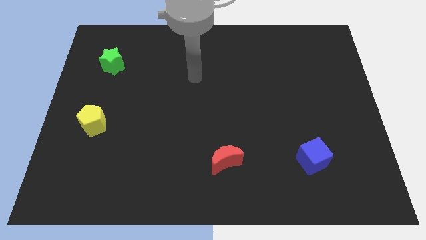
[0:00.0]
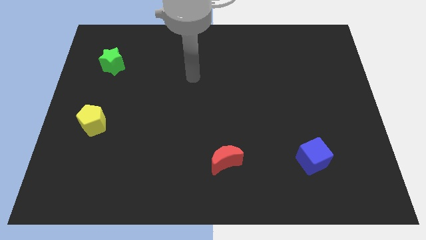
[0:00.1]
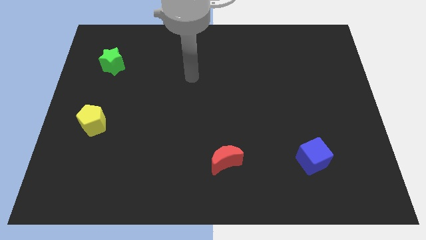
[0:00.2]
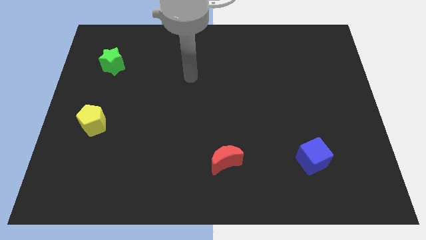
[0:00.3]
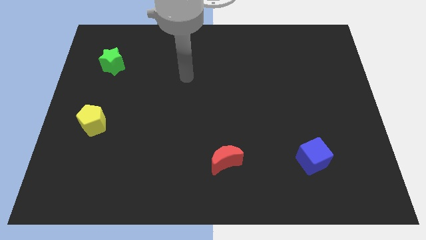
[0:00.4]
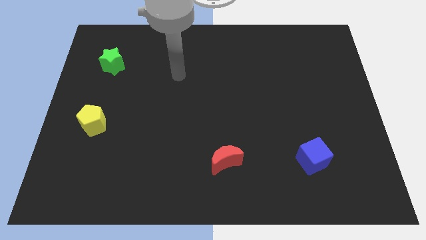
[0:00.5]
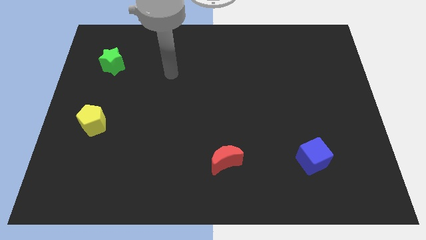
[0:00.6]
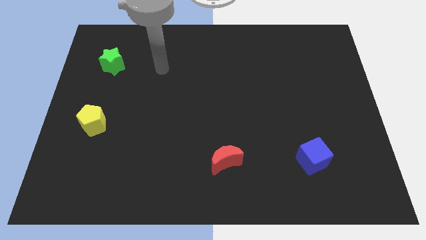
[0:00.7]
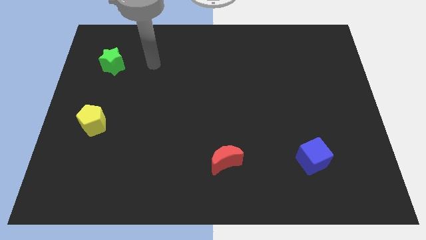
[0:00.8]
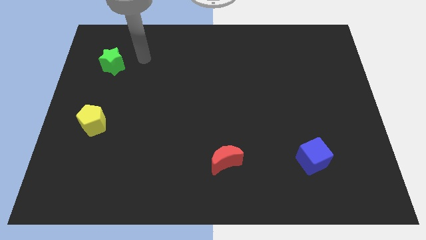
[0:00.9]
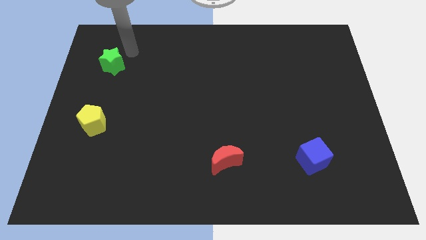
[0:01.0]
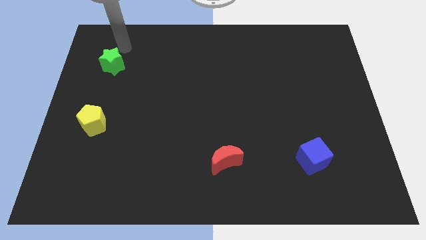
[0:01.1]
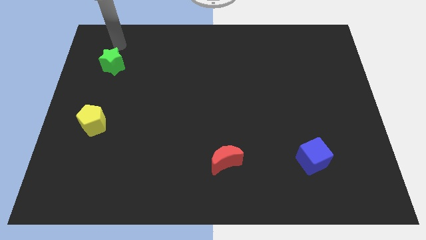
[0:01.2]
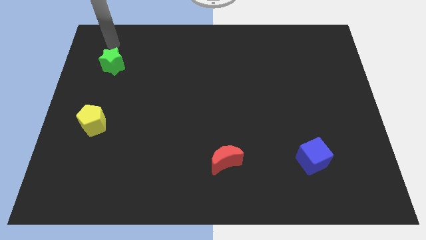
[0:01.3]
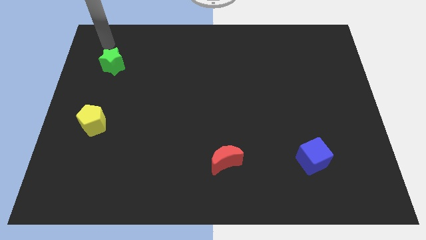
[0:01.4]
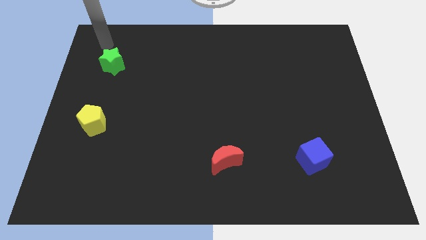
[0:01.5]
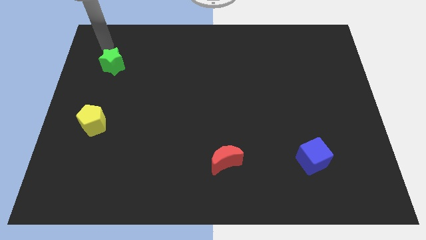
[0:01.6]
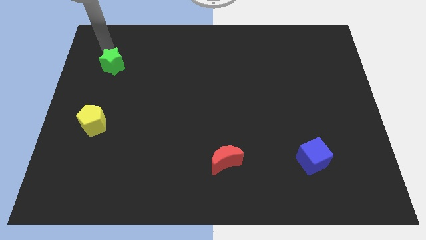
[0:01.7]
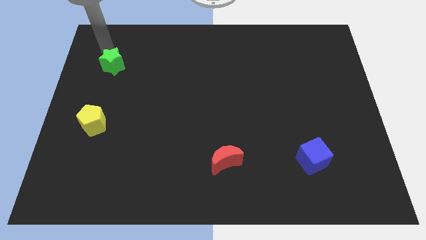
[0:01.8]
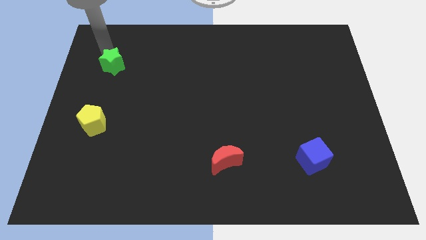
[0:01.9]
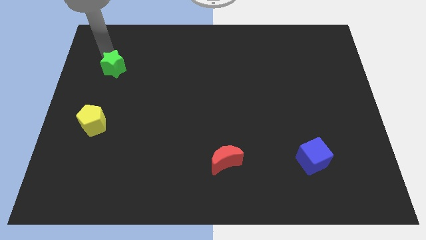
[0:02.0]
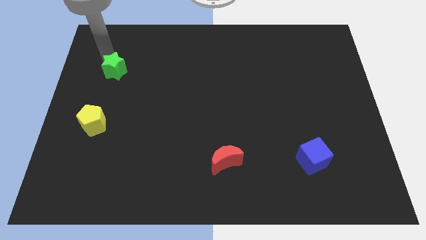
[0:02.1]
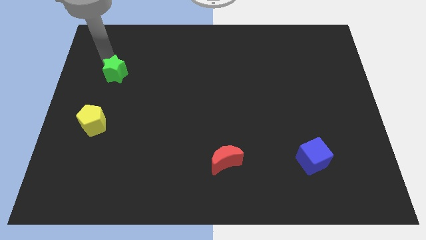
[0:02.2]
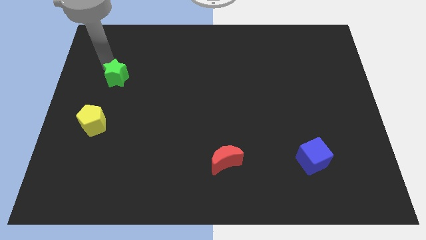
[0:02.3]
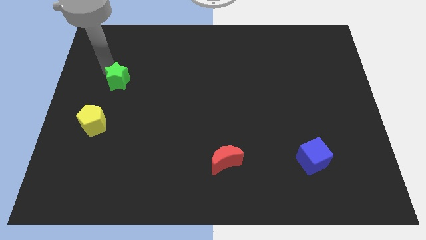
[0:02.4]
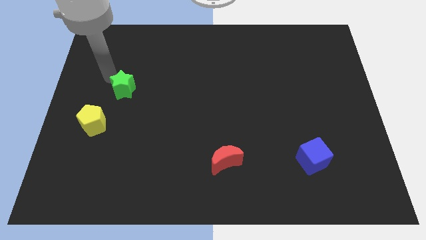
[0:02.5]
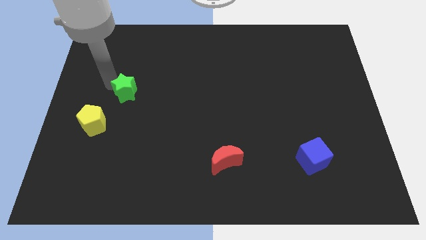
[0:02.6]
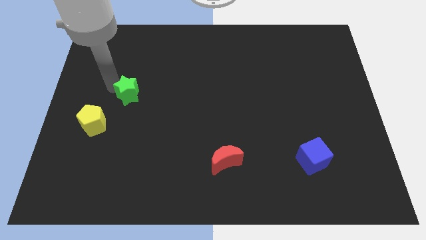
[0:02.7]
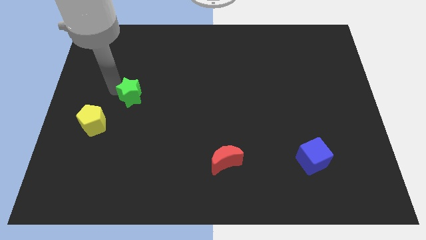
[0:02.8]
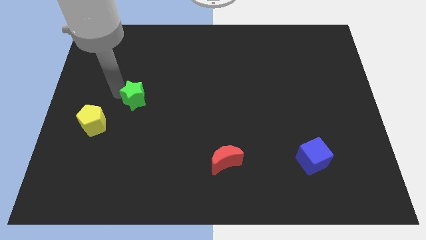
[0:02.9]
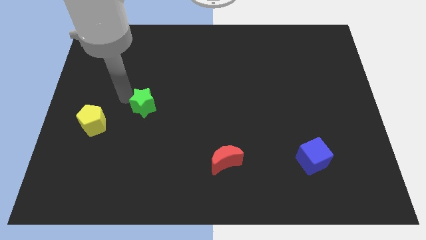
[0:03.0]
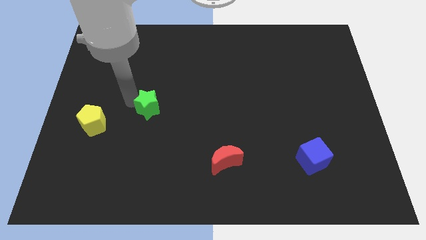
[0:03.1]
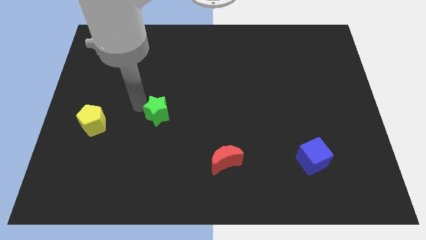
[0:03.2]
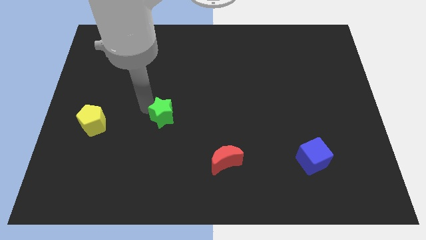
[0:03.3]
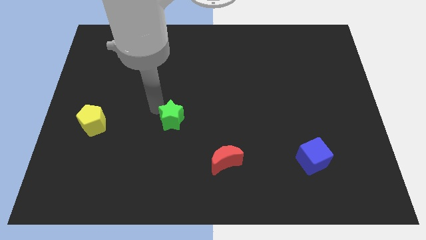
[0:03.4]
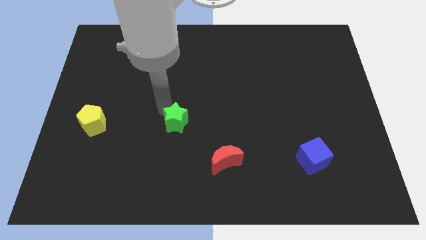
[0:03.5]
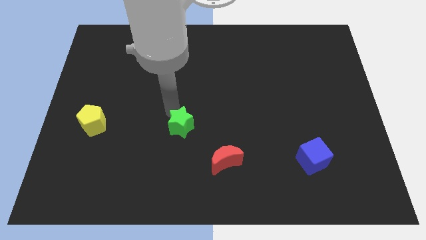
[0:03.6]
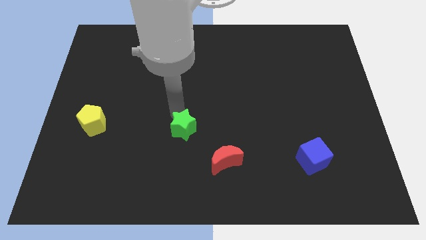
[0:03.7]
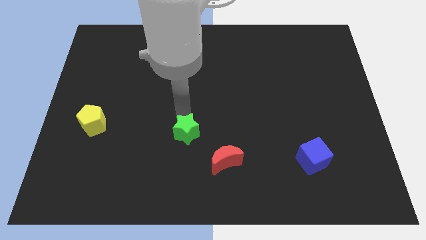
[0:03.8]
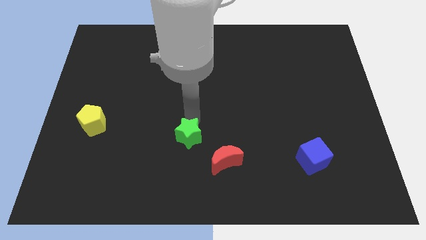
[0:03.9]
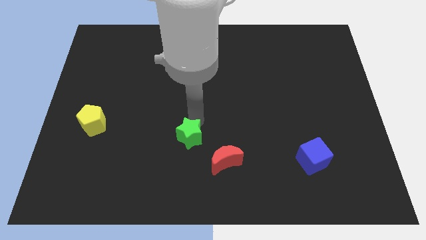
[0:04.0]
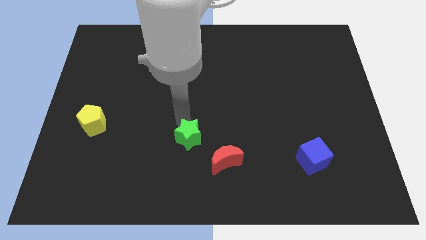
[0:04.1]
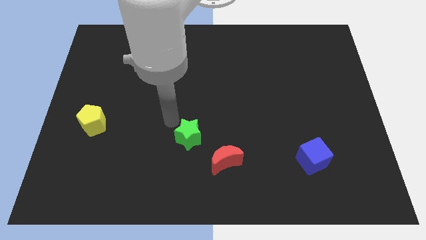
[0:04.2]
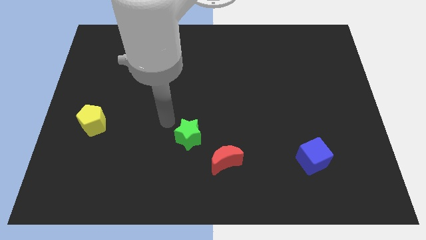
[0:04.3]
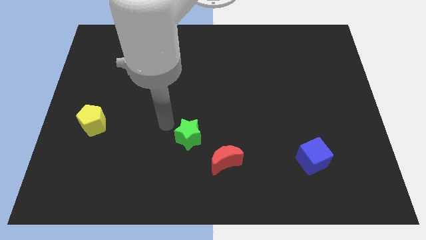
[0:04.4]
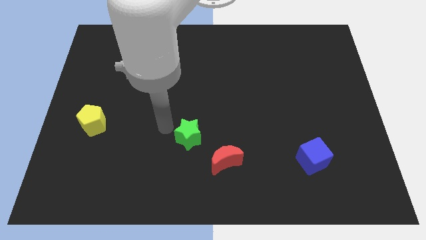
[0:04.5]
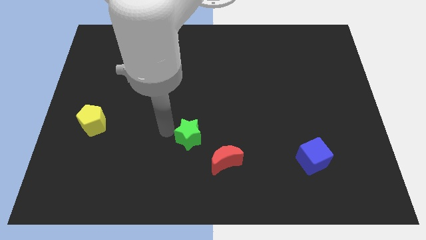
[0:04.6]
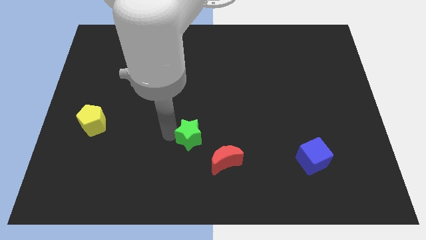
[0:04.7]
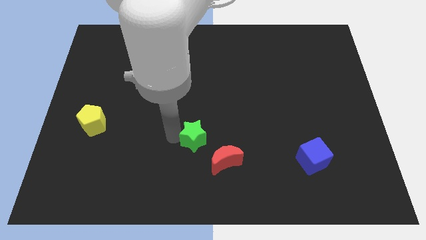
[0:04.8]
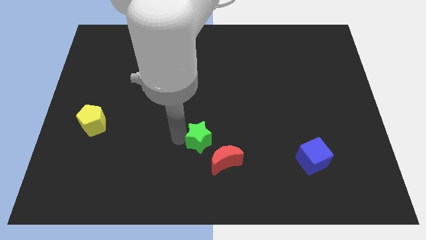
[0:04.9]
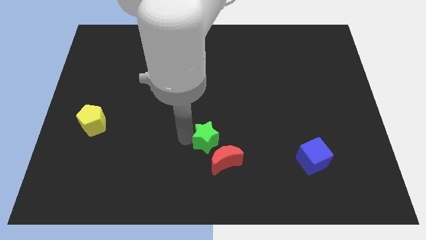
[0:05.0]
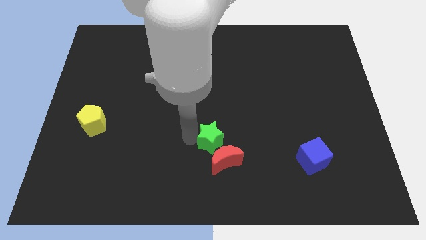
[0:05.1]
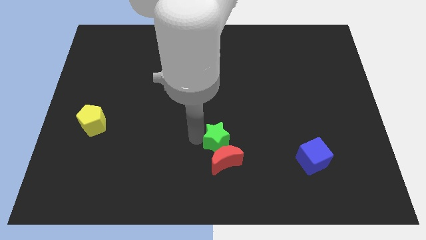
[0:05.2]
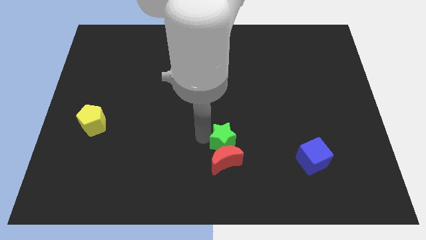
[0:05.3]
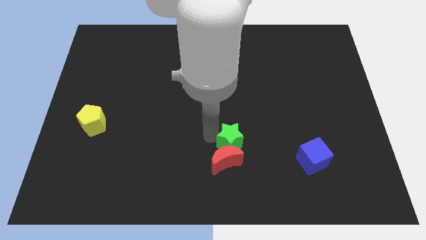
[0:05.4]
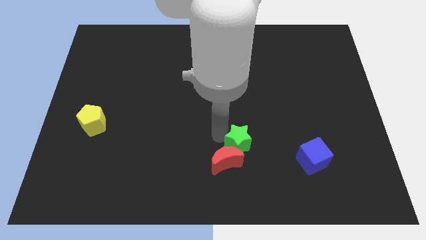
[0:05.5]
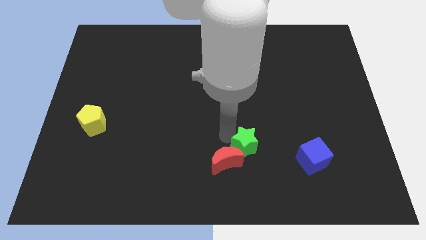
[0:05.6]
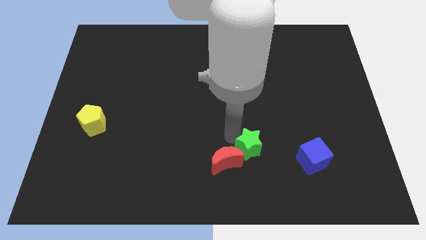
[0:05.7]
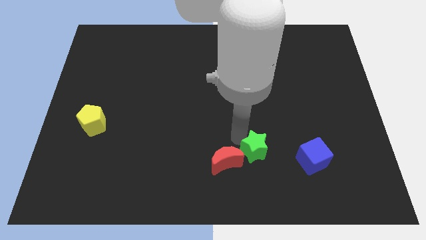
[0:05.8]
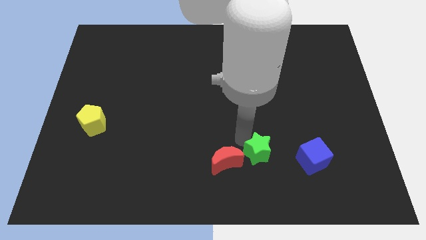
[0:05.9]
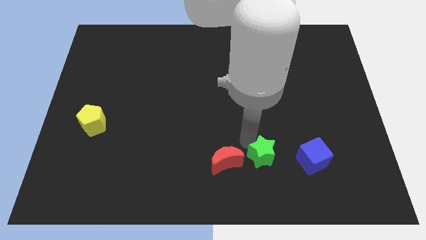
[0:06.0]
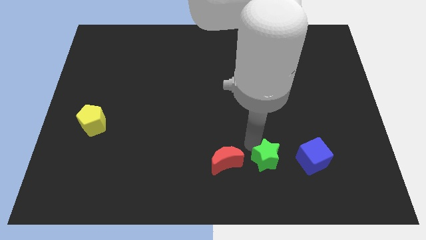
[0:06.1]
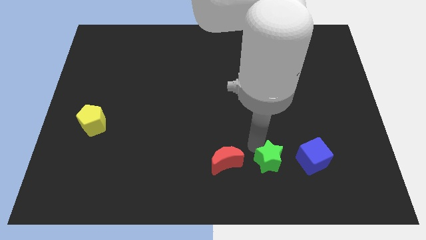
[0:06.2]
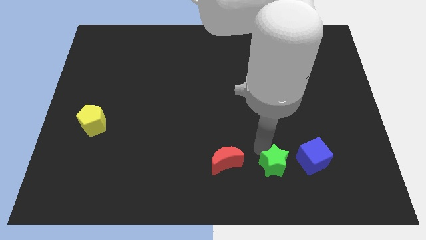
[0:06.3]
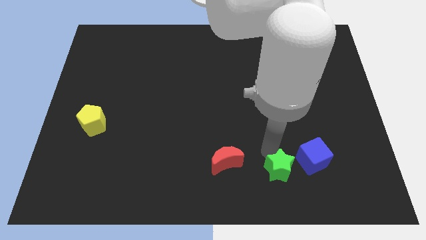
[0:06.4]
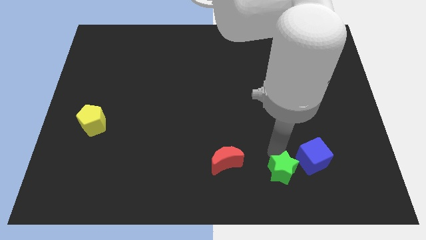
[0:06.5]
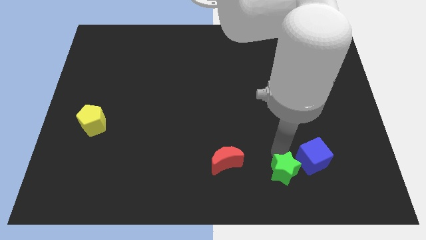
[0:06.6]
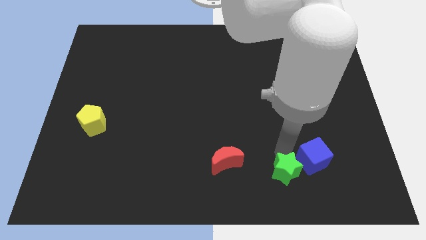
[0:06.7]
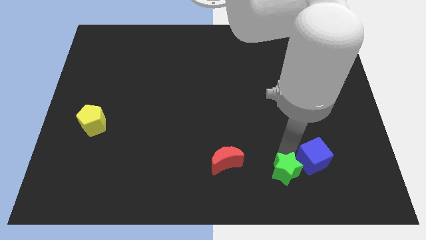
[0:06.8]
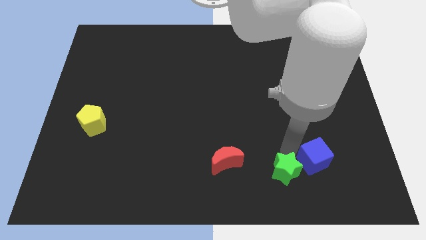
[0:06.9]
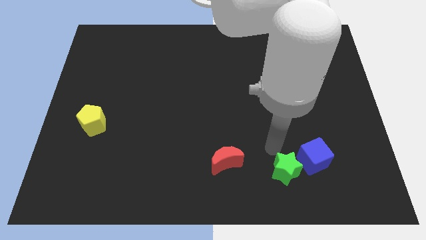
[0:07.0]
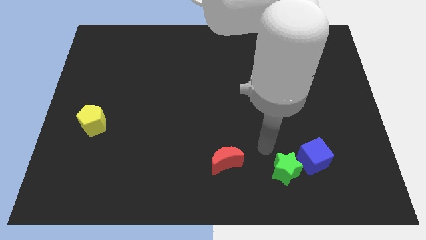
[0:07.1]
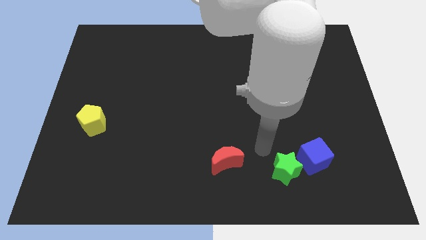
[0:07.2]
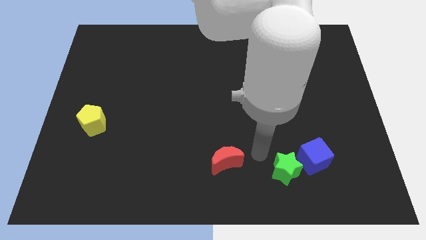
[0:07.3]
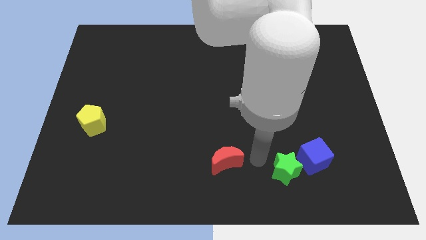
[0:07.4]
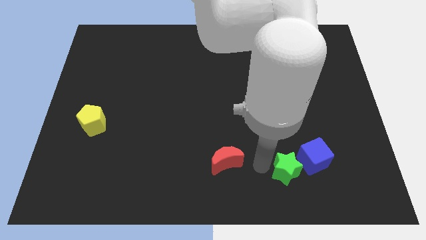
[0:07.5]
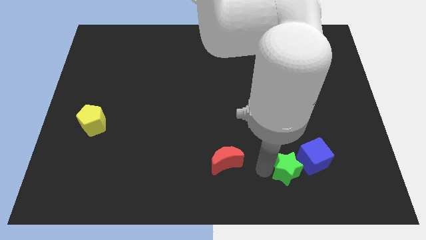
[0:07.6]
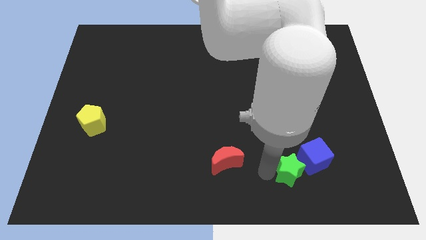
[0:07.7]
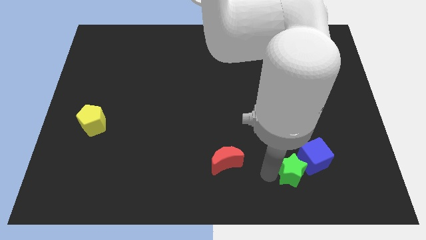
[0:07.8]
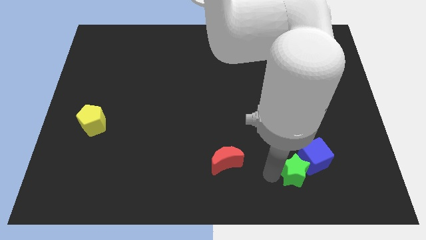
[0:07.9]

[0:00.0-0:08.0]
move the green star towards the blue cube

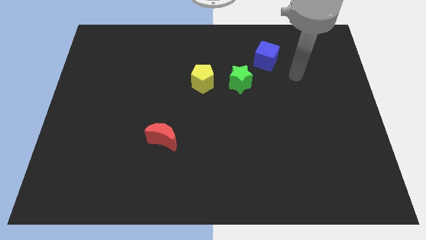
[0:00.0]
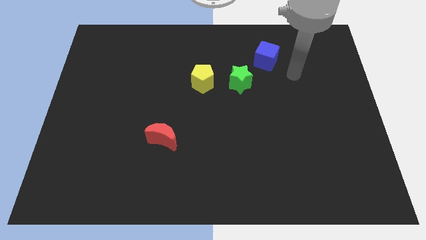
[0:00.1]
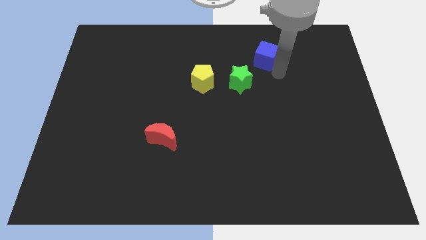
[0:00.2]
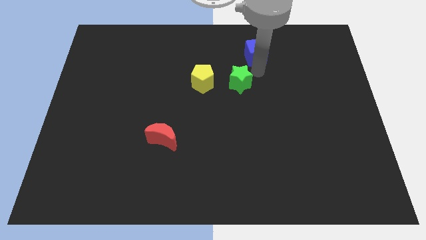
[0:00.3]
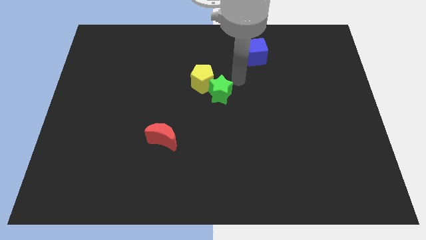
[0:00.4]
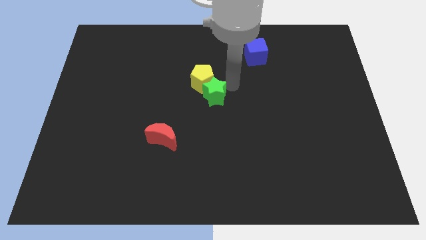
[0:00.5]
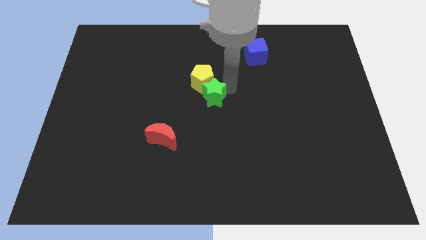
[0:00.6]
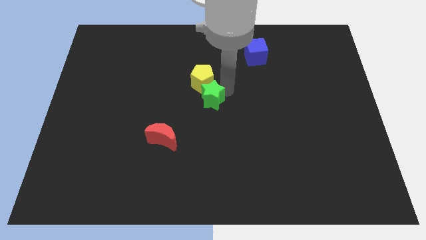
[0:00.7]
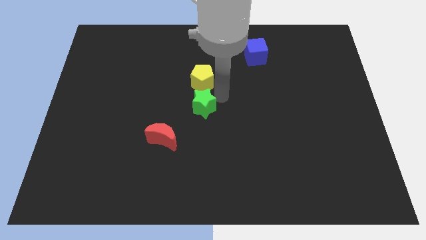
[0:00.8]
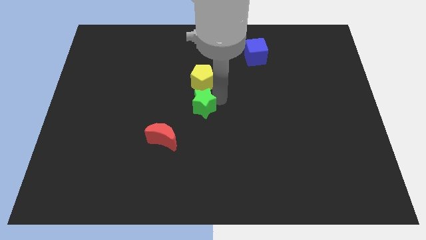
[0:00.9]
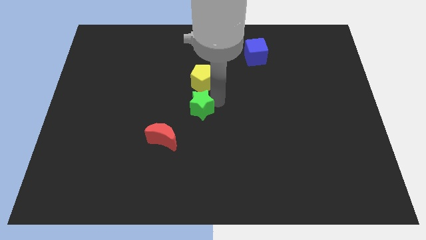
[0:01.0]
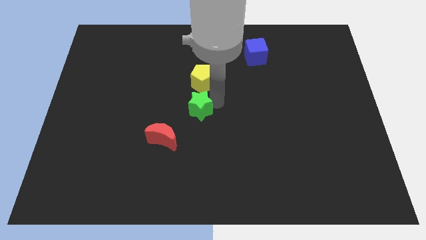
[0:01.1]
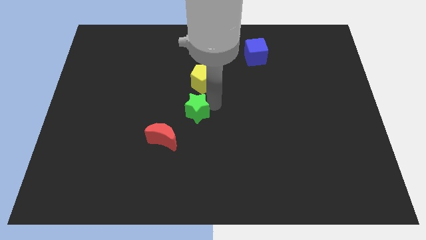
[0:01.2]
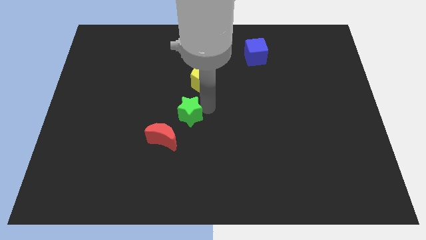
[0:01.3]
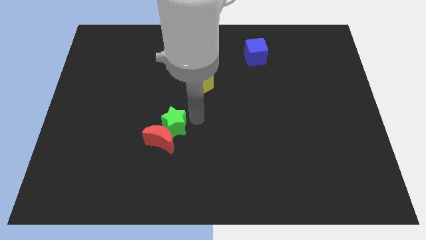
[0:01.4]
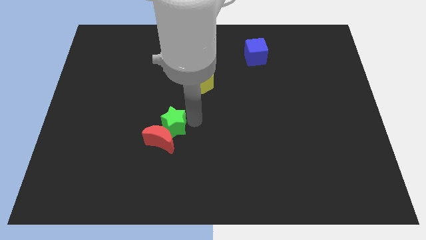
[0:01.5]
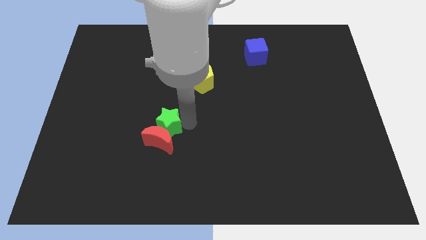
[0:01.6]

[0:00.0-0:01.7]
slide the green star close to the moon
